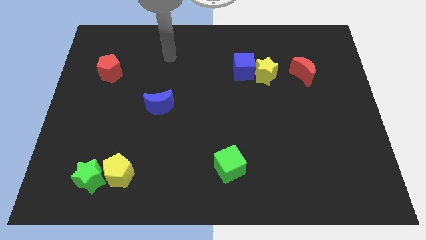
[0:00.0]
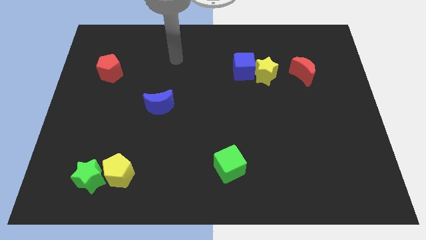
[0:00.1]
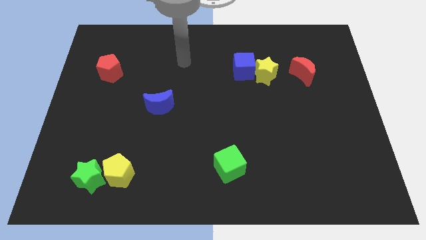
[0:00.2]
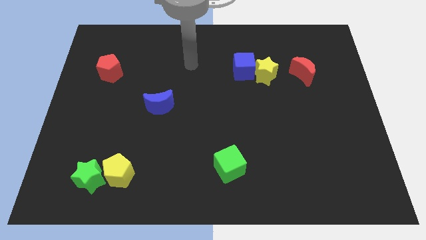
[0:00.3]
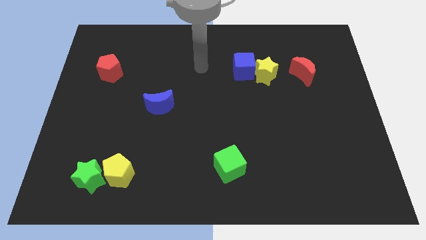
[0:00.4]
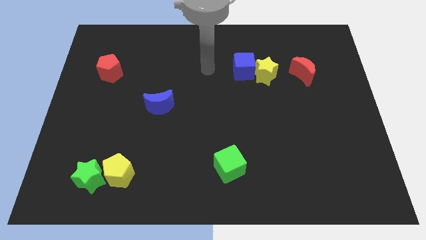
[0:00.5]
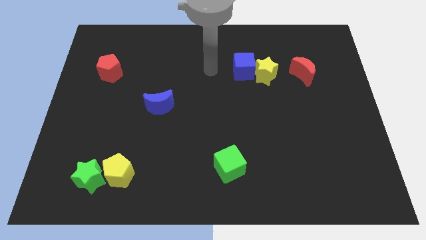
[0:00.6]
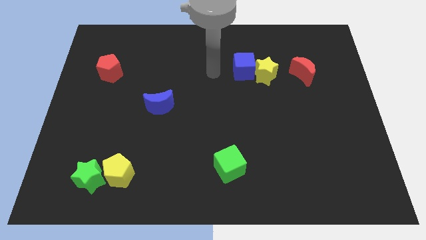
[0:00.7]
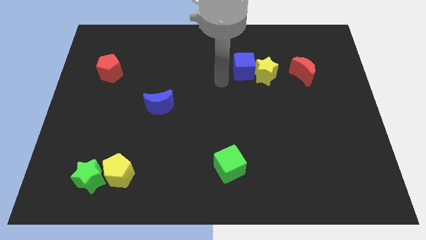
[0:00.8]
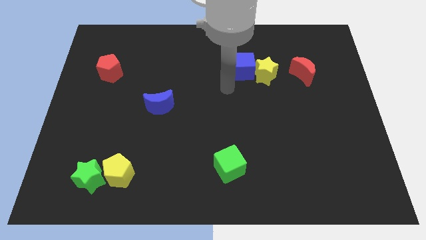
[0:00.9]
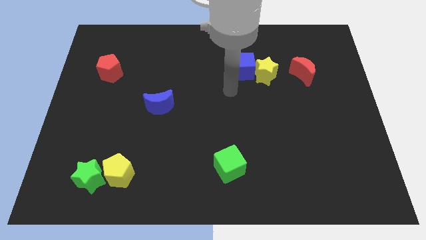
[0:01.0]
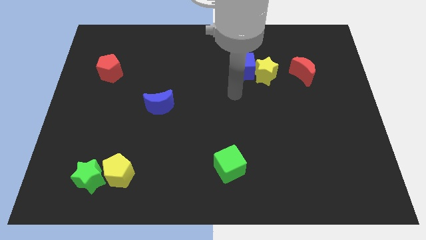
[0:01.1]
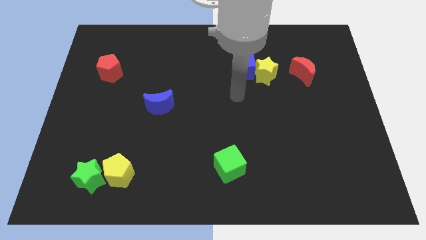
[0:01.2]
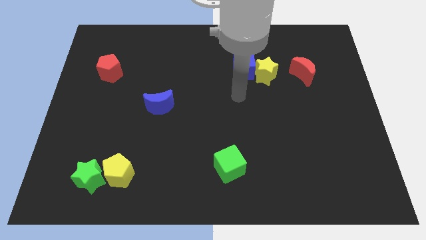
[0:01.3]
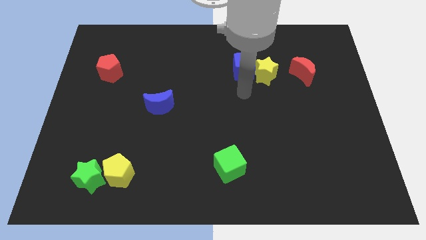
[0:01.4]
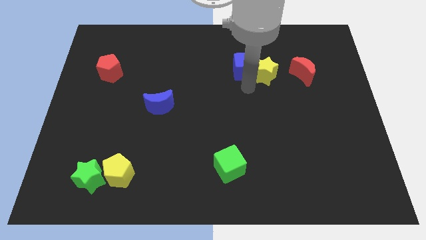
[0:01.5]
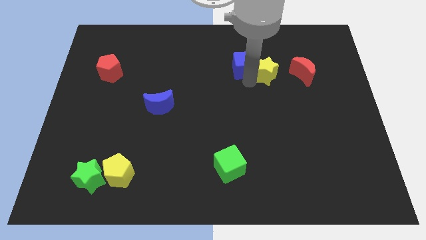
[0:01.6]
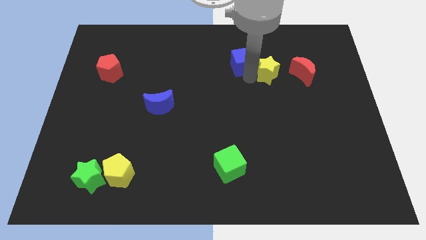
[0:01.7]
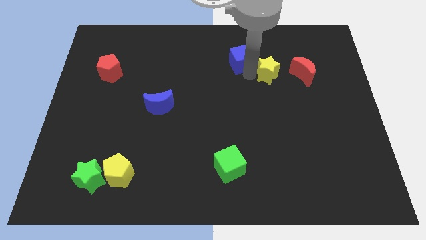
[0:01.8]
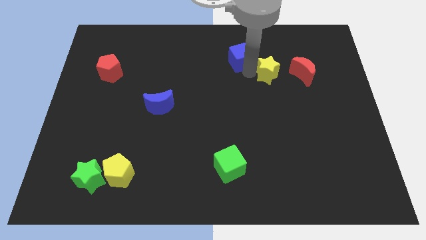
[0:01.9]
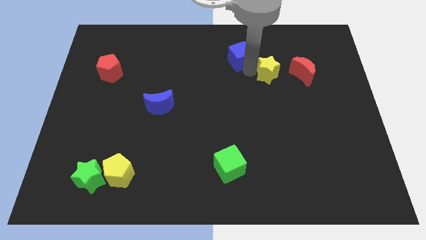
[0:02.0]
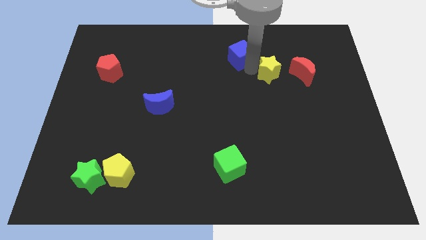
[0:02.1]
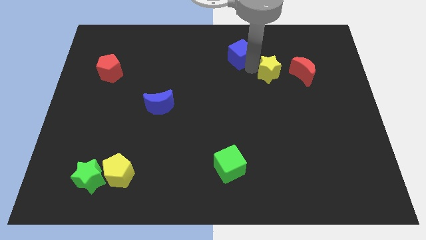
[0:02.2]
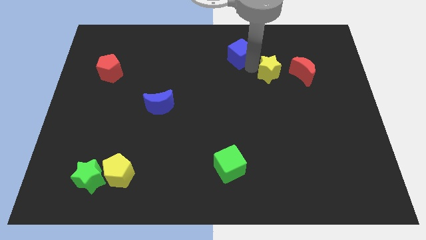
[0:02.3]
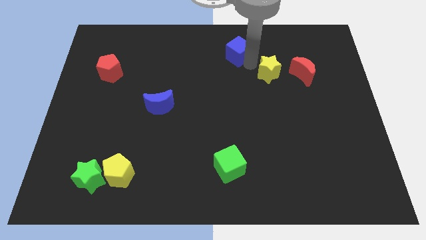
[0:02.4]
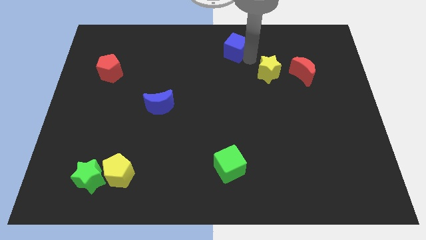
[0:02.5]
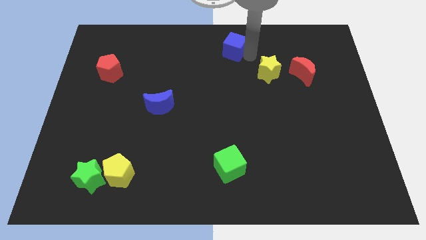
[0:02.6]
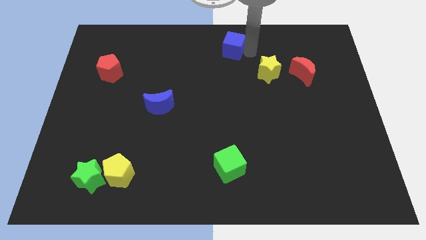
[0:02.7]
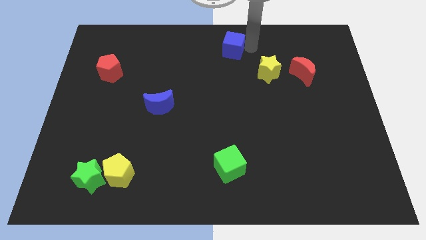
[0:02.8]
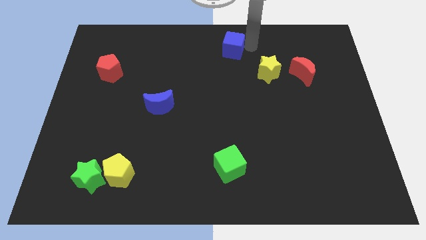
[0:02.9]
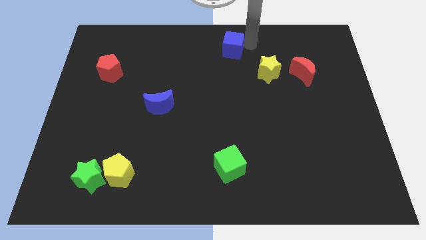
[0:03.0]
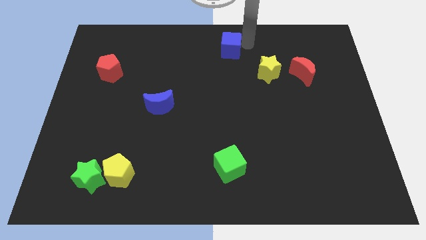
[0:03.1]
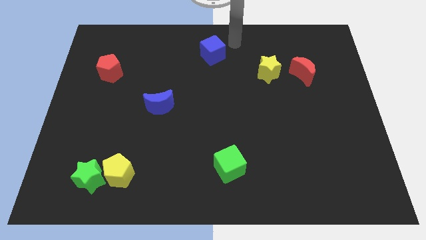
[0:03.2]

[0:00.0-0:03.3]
push the blue cube to the top left of the yellow star

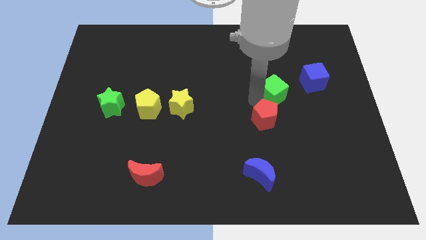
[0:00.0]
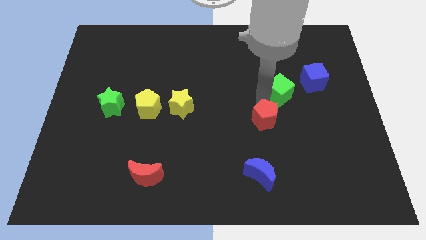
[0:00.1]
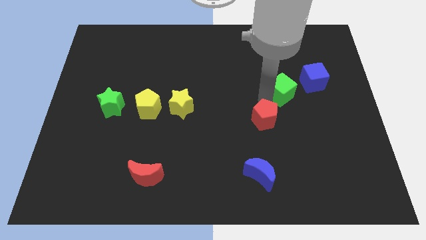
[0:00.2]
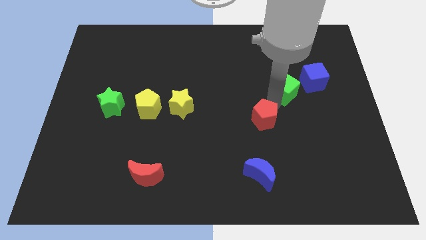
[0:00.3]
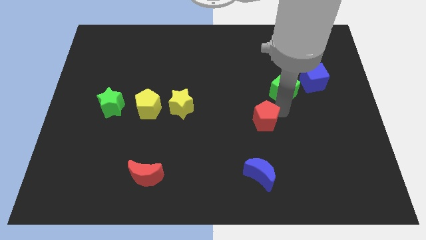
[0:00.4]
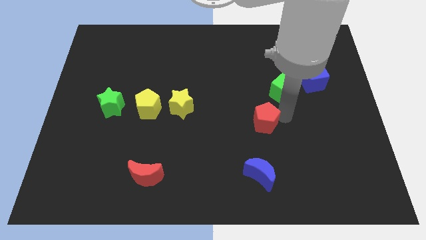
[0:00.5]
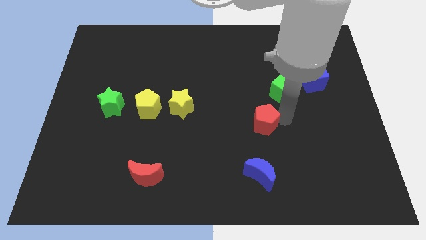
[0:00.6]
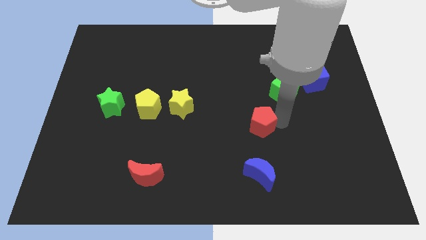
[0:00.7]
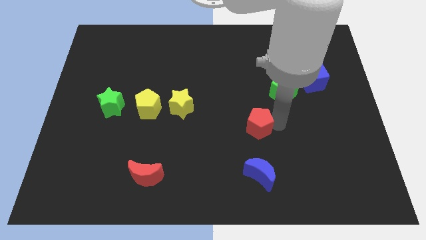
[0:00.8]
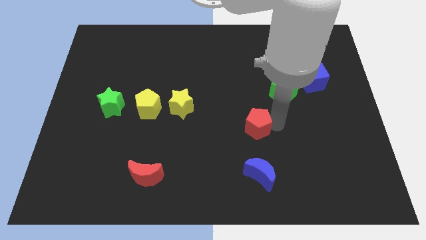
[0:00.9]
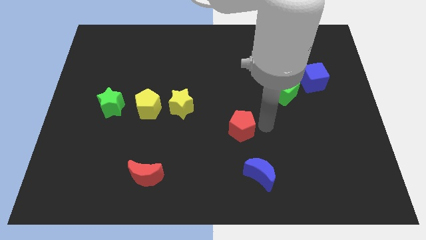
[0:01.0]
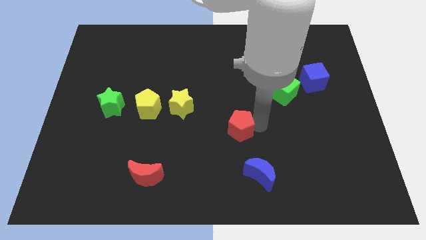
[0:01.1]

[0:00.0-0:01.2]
push gree cube towards blue cube

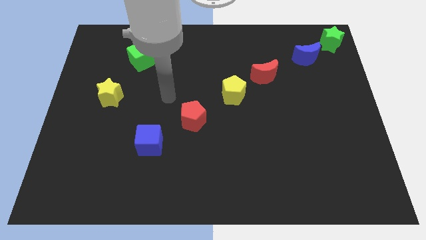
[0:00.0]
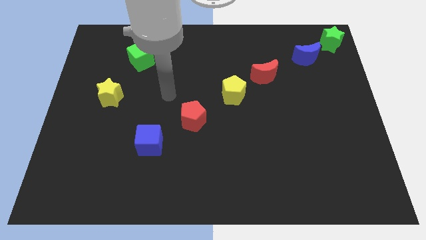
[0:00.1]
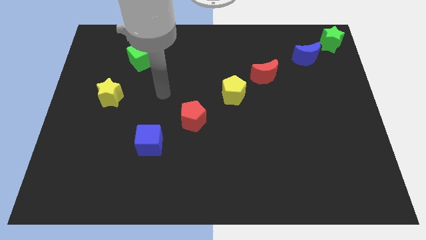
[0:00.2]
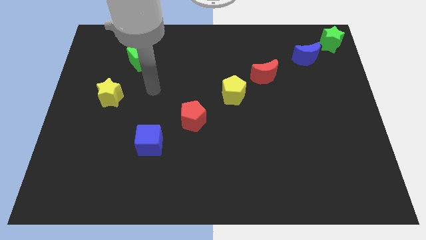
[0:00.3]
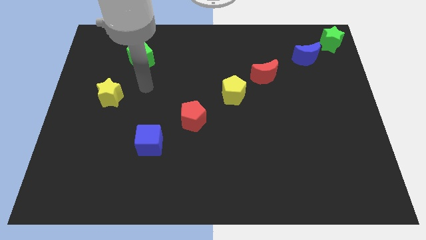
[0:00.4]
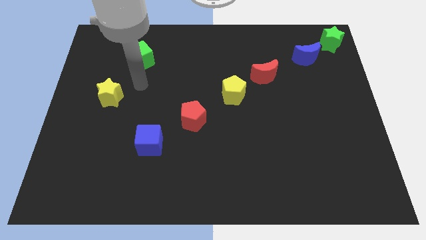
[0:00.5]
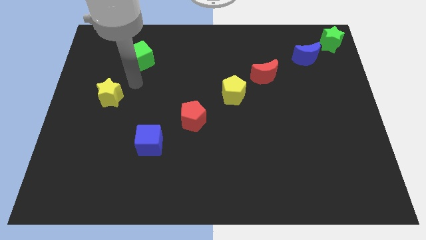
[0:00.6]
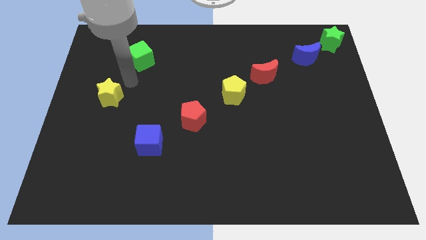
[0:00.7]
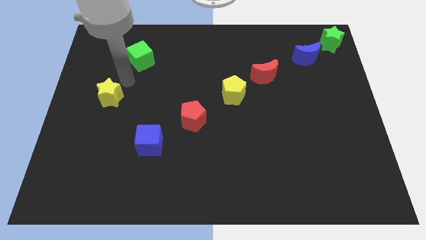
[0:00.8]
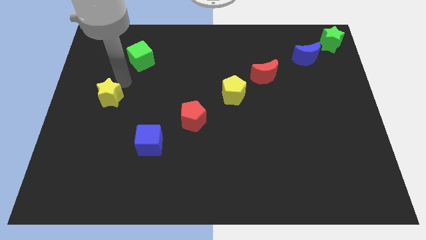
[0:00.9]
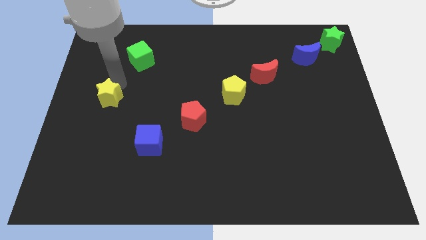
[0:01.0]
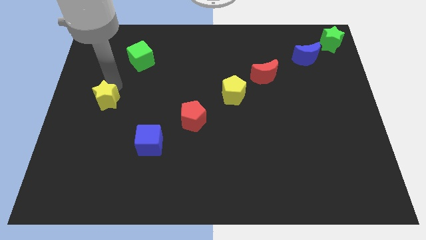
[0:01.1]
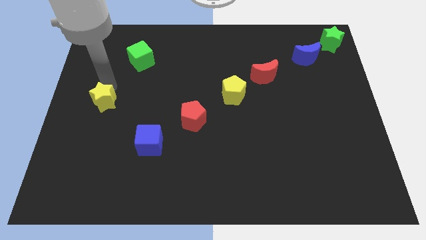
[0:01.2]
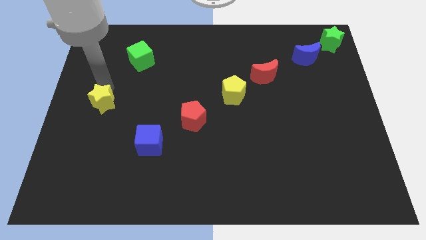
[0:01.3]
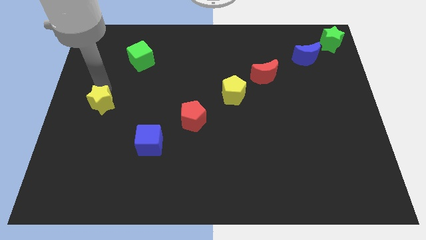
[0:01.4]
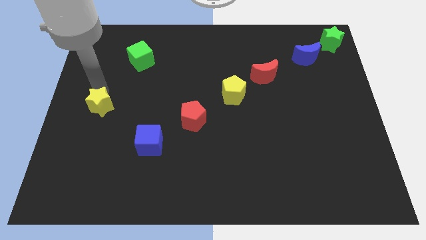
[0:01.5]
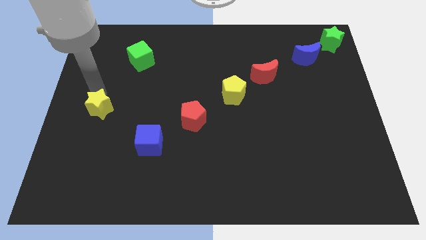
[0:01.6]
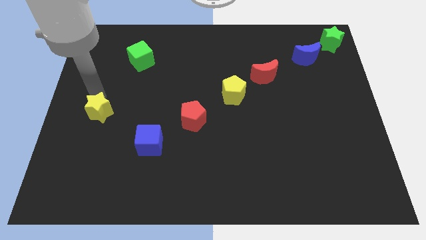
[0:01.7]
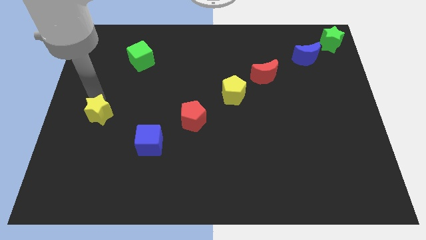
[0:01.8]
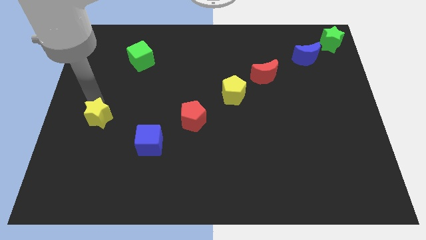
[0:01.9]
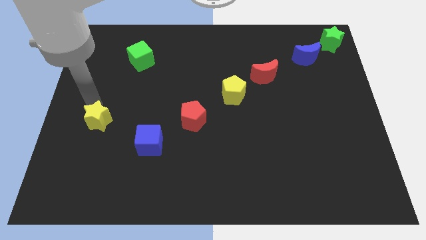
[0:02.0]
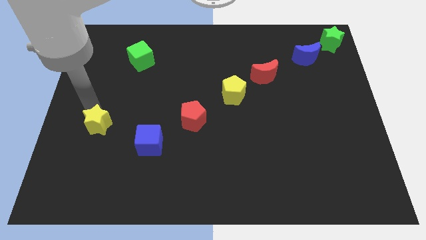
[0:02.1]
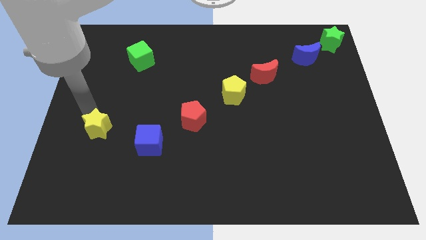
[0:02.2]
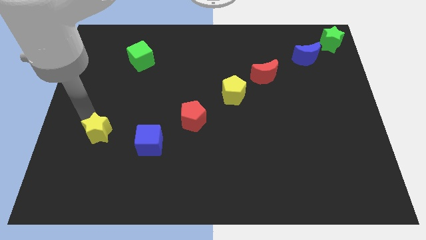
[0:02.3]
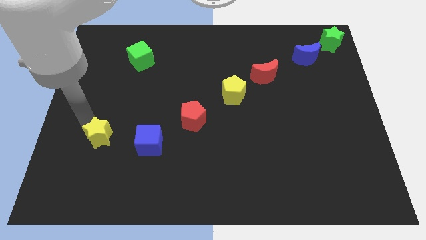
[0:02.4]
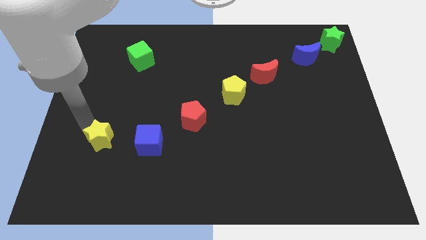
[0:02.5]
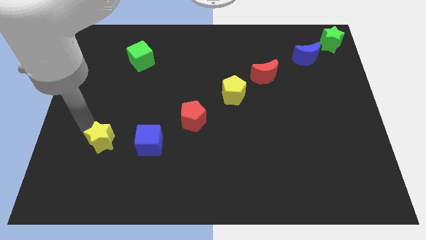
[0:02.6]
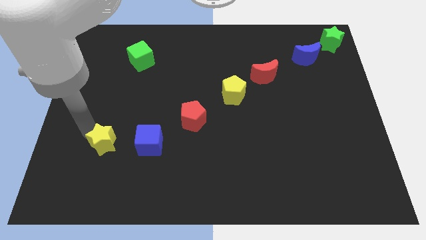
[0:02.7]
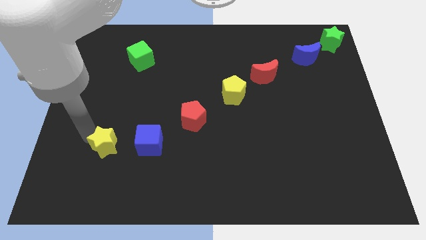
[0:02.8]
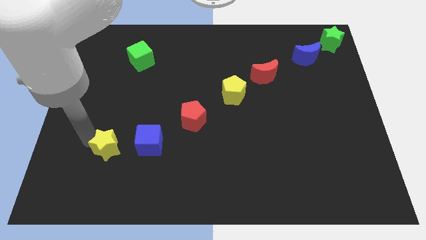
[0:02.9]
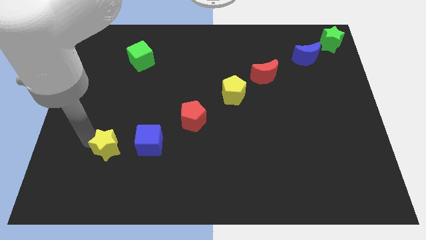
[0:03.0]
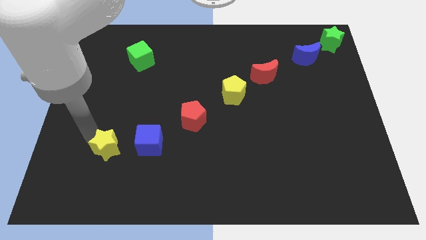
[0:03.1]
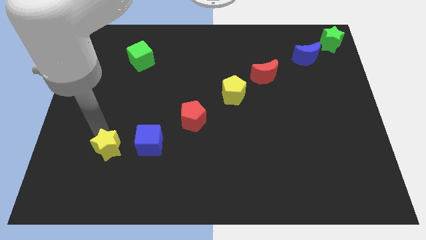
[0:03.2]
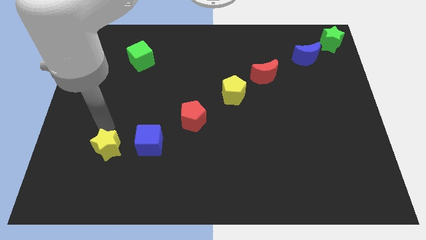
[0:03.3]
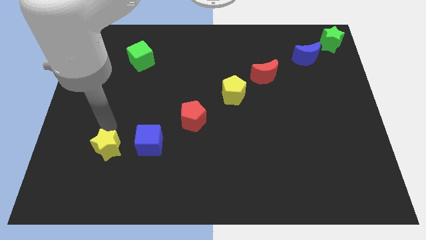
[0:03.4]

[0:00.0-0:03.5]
push the yellow star at the left of the blue cube

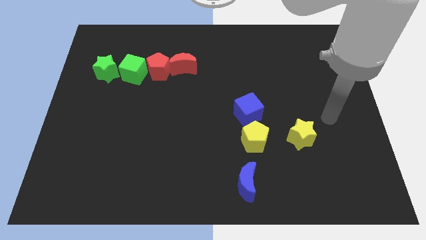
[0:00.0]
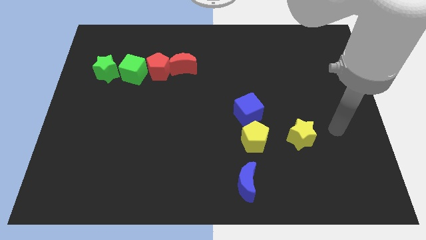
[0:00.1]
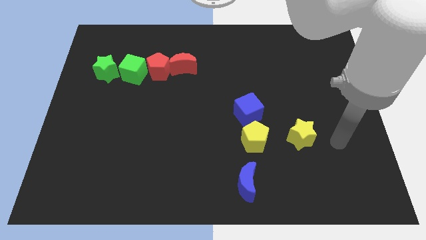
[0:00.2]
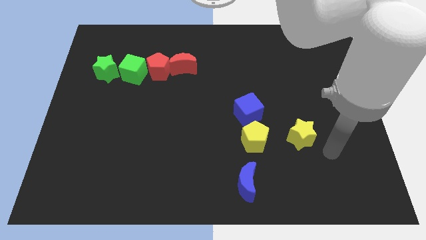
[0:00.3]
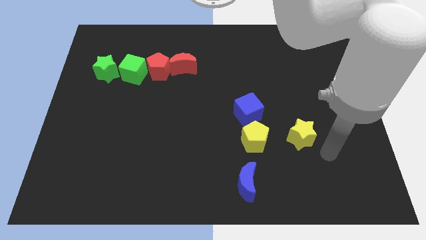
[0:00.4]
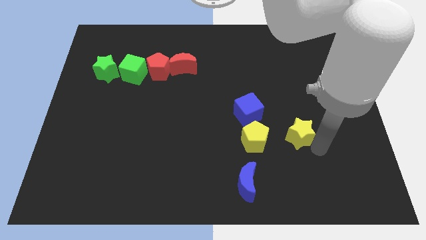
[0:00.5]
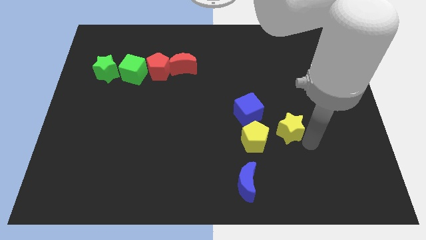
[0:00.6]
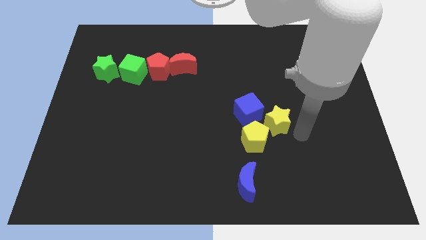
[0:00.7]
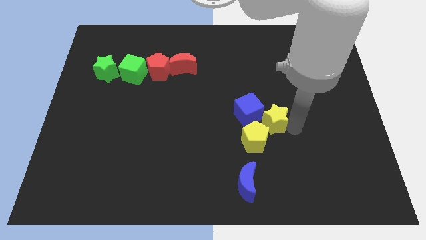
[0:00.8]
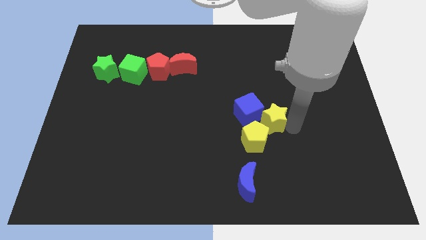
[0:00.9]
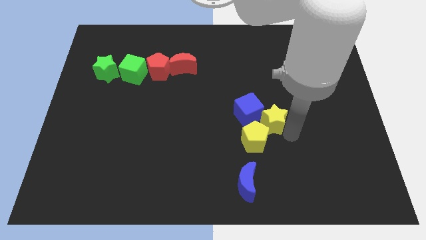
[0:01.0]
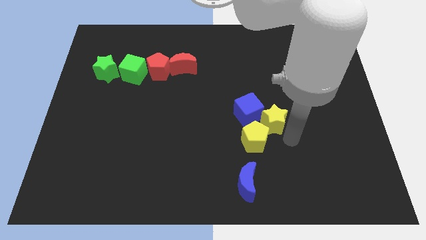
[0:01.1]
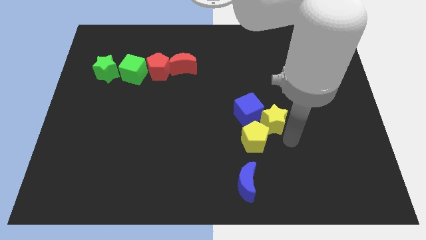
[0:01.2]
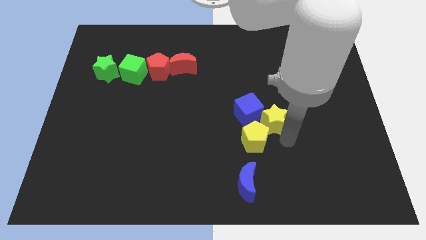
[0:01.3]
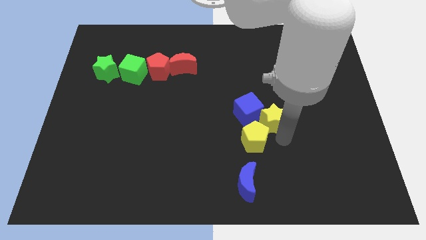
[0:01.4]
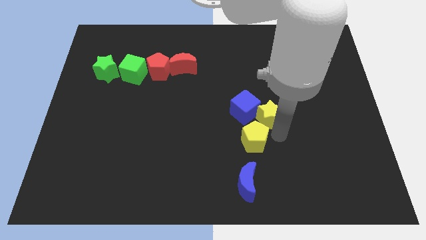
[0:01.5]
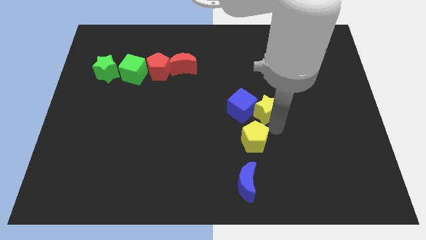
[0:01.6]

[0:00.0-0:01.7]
move the yellow star into the blue cube
